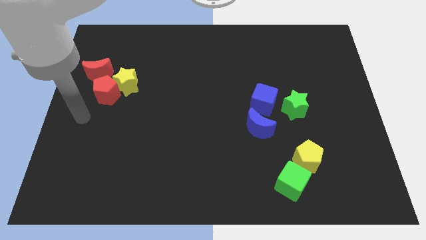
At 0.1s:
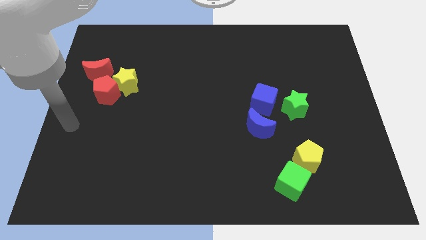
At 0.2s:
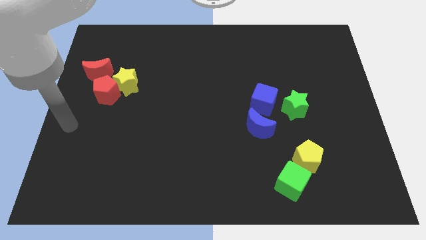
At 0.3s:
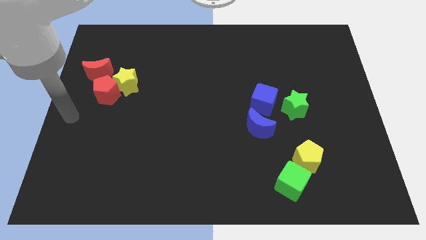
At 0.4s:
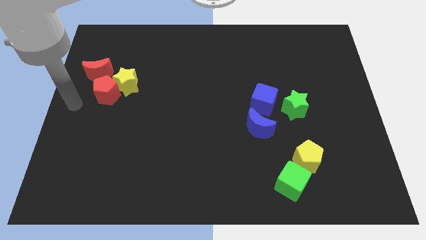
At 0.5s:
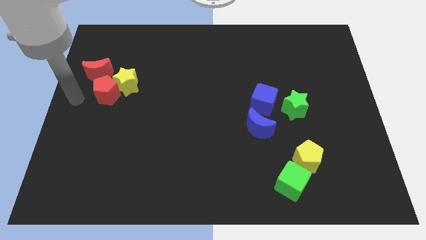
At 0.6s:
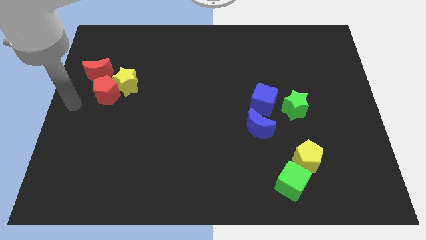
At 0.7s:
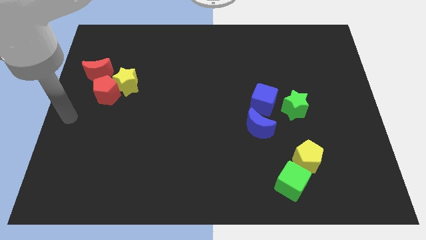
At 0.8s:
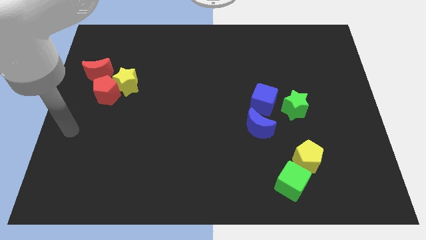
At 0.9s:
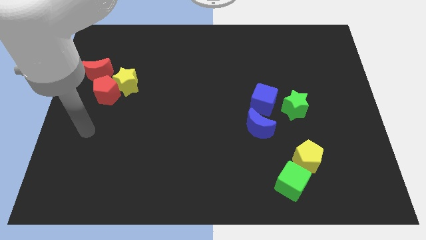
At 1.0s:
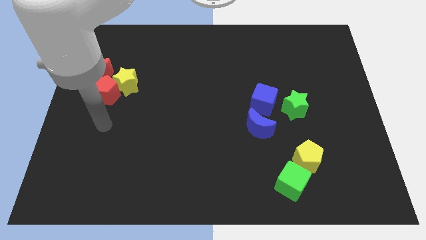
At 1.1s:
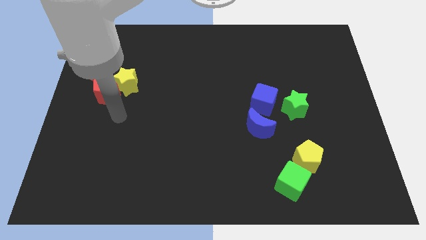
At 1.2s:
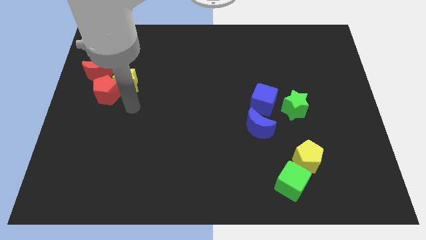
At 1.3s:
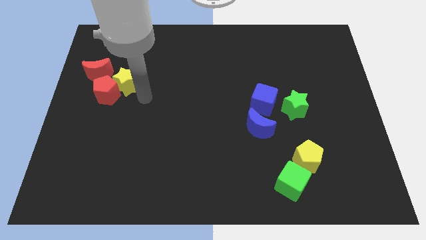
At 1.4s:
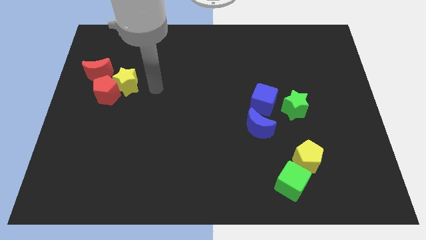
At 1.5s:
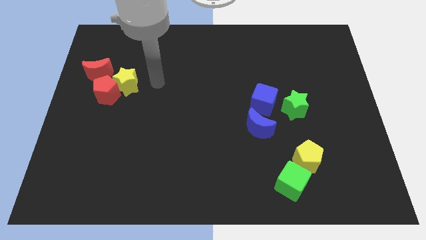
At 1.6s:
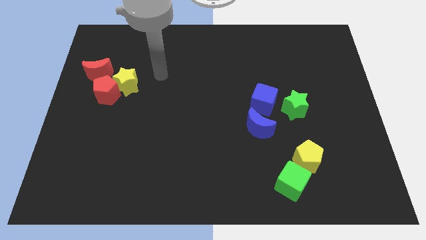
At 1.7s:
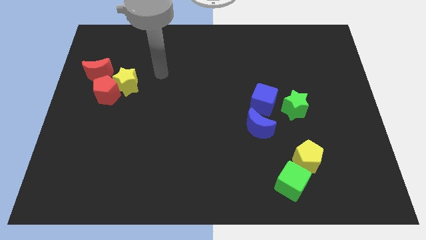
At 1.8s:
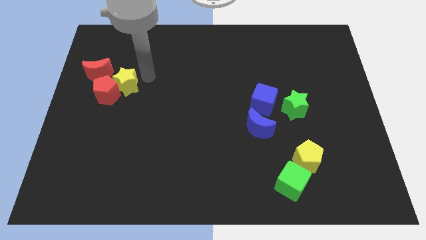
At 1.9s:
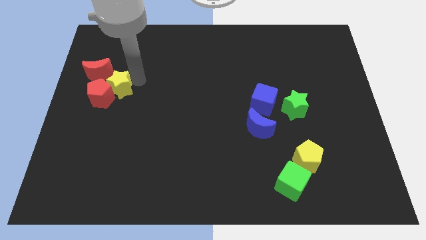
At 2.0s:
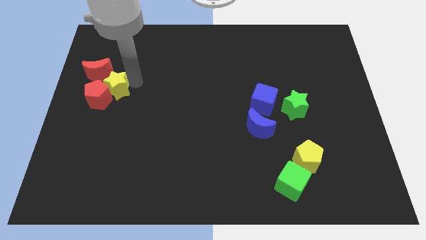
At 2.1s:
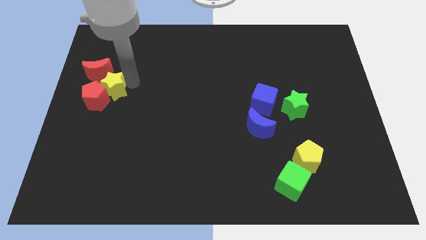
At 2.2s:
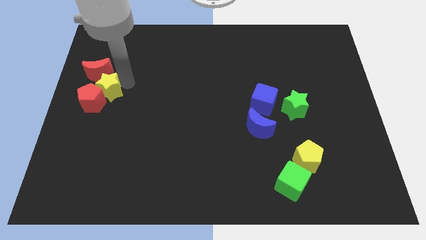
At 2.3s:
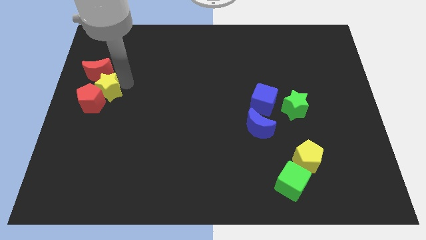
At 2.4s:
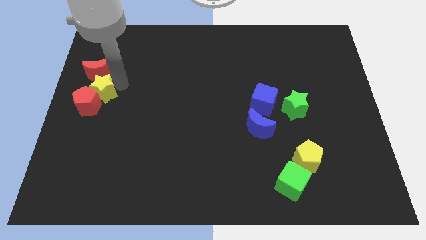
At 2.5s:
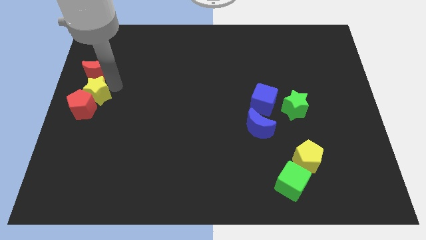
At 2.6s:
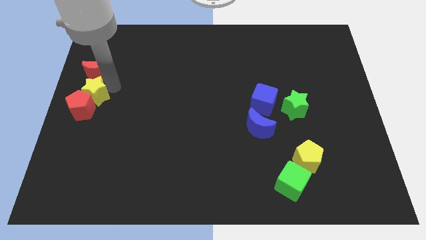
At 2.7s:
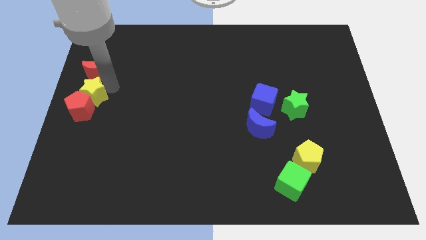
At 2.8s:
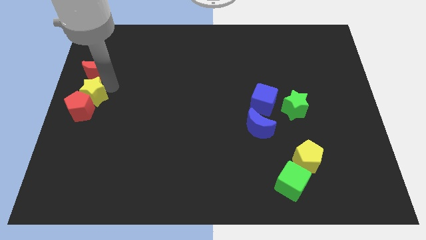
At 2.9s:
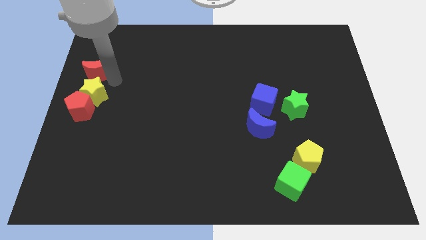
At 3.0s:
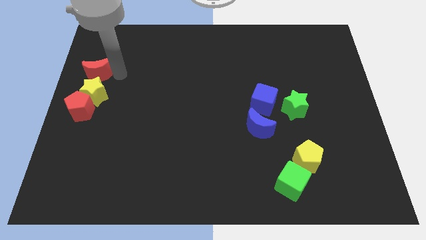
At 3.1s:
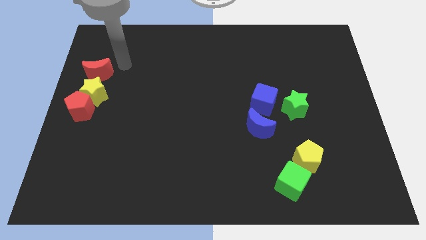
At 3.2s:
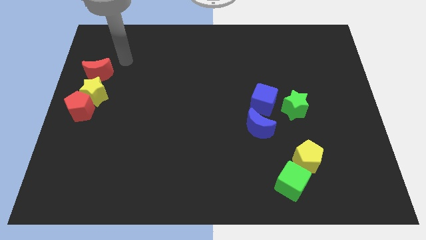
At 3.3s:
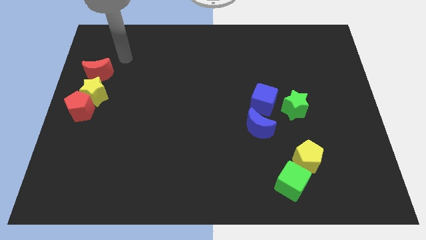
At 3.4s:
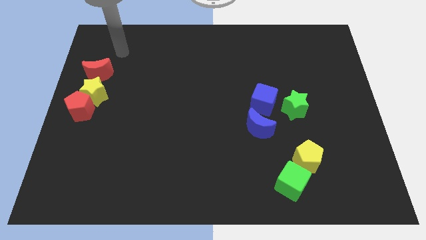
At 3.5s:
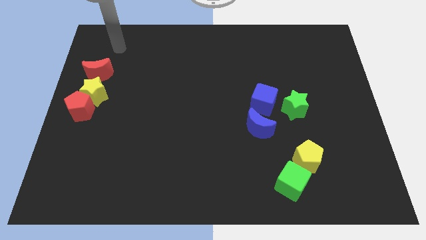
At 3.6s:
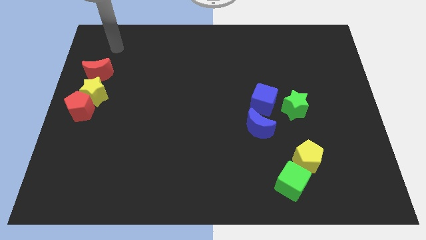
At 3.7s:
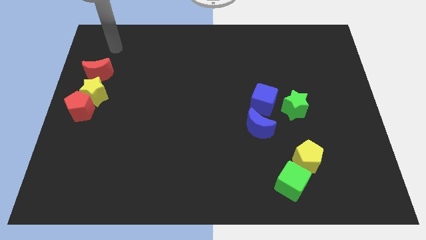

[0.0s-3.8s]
move the yellow star and the red pentagon to the bottom of the red crescent

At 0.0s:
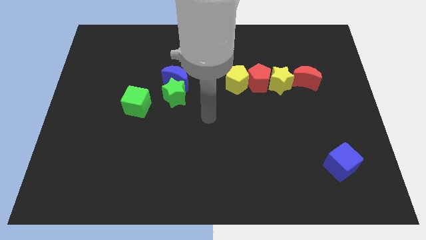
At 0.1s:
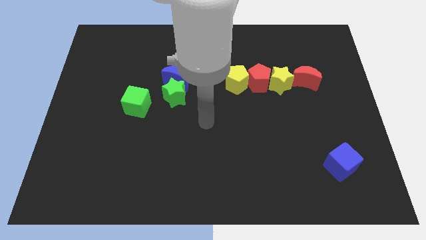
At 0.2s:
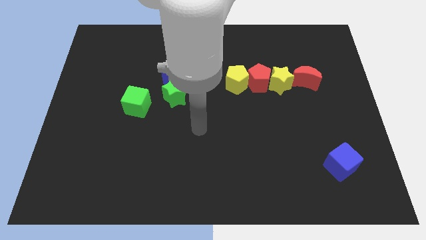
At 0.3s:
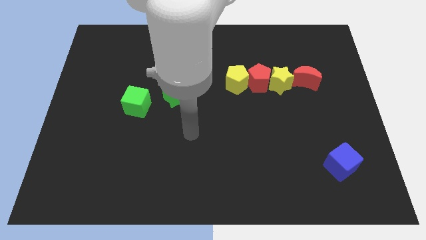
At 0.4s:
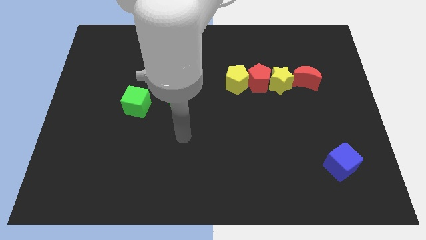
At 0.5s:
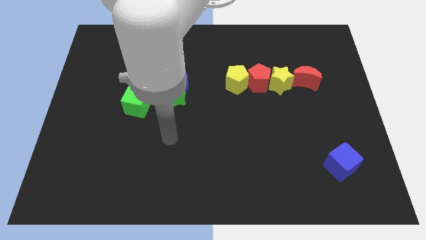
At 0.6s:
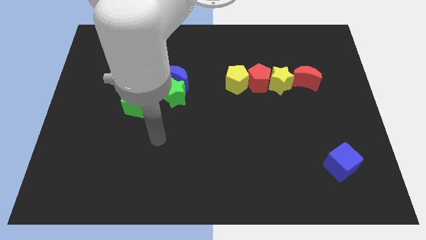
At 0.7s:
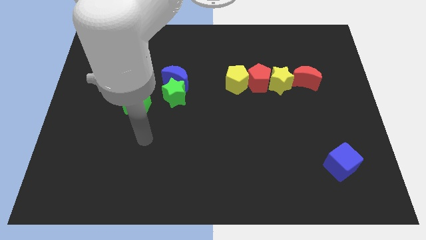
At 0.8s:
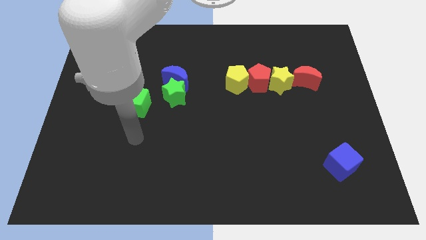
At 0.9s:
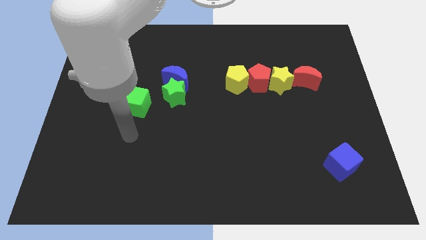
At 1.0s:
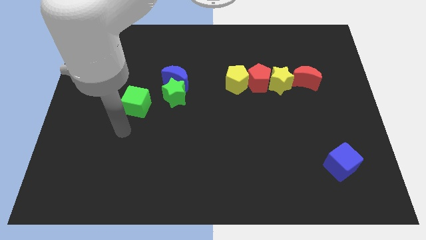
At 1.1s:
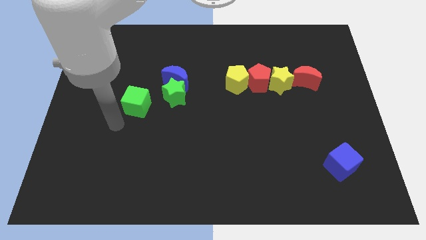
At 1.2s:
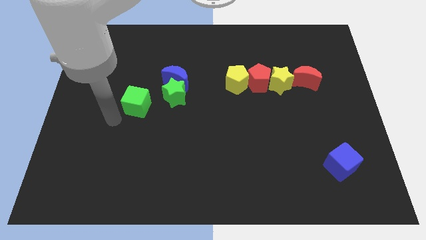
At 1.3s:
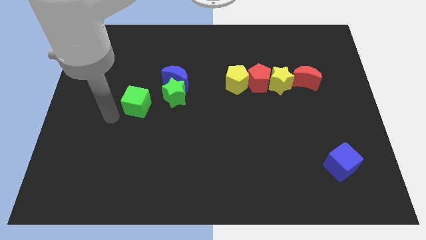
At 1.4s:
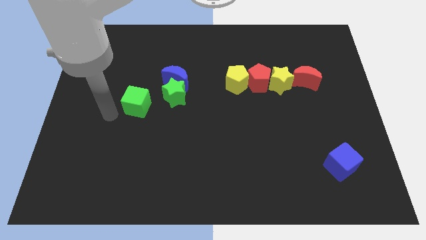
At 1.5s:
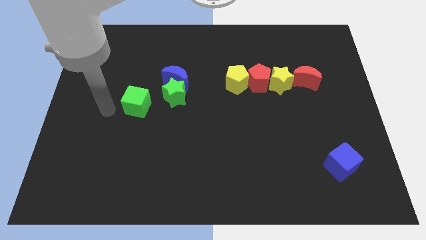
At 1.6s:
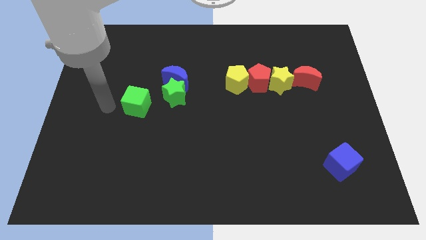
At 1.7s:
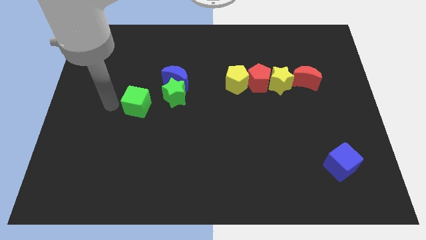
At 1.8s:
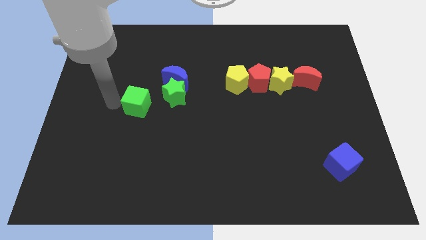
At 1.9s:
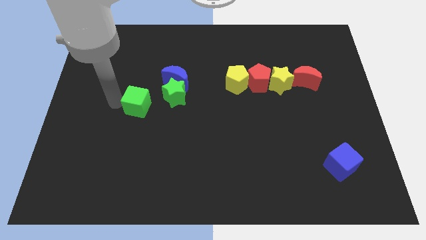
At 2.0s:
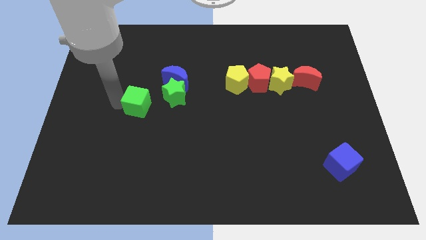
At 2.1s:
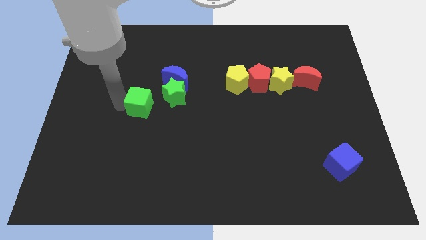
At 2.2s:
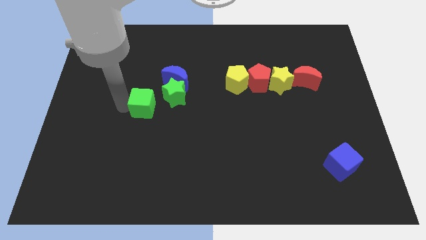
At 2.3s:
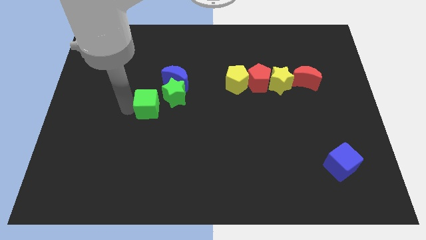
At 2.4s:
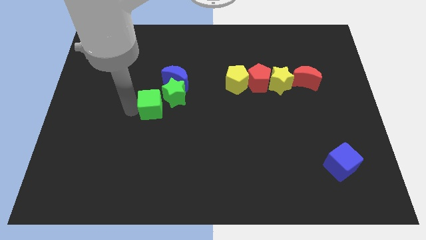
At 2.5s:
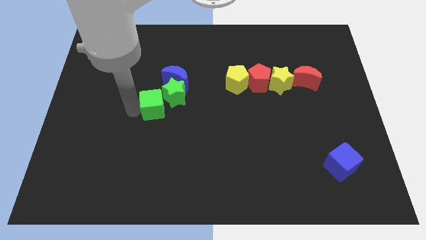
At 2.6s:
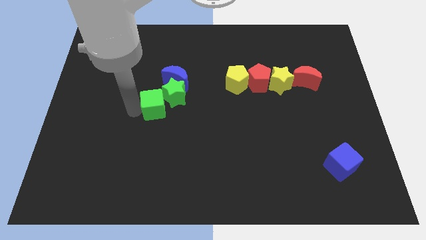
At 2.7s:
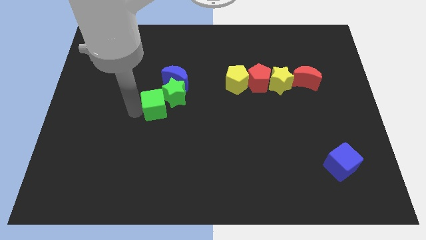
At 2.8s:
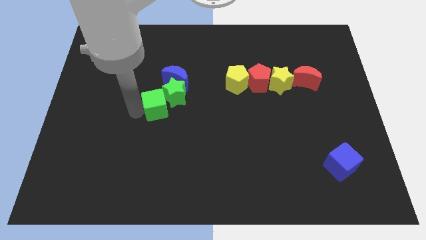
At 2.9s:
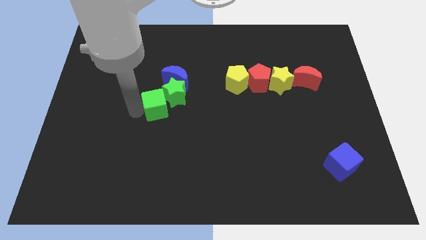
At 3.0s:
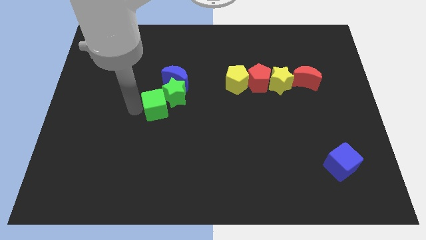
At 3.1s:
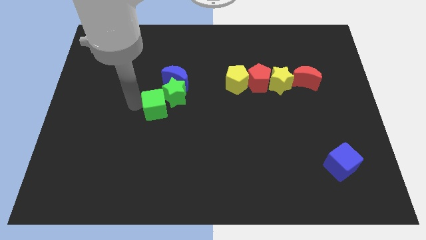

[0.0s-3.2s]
move green cube close to the green star

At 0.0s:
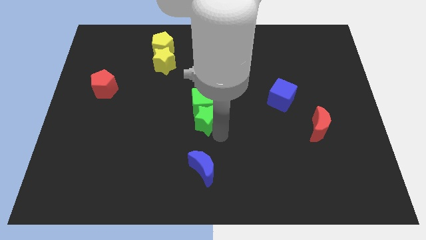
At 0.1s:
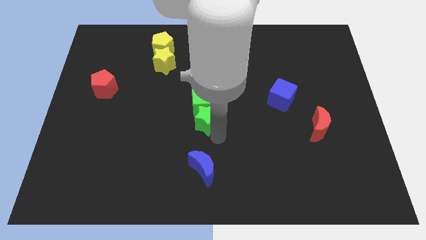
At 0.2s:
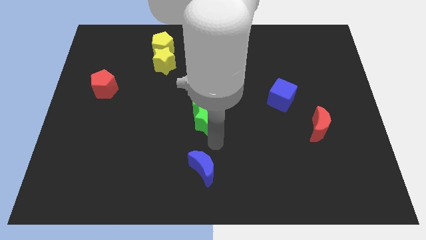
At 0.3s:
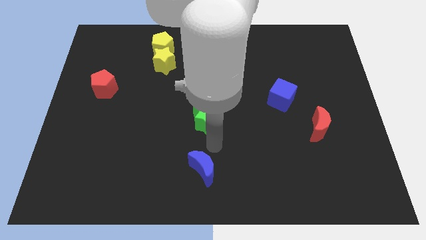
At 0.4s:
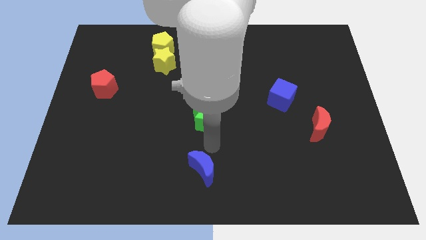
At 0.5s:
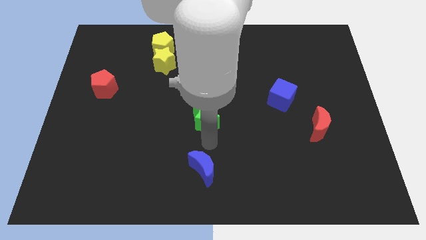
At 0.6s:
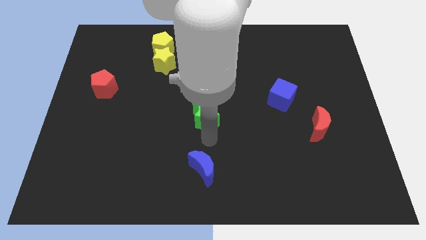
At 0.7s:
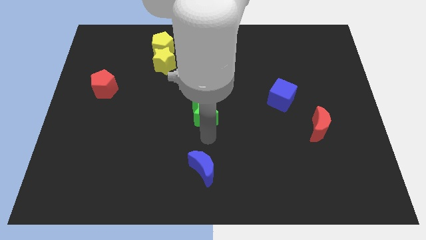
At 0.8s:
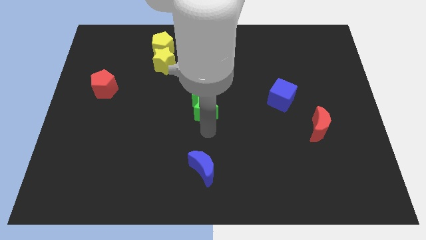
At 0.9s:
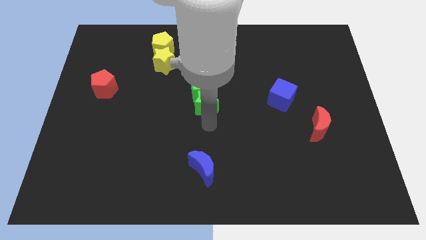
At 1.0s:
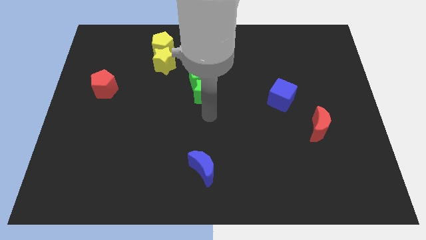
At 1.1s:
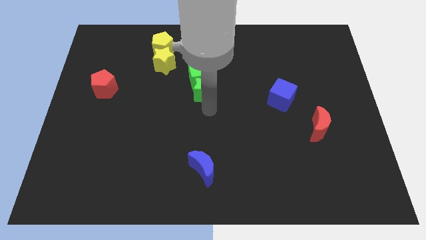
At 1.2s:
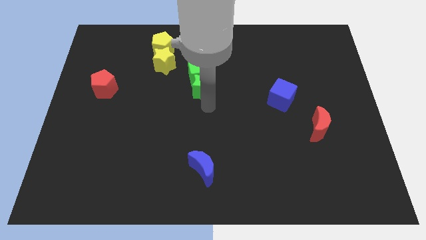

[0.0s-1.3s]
place the green blocks to the right side of the red pentagon

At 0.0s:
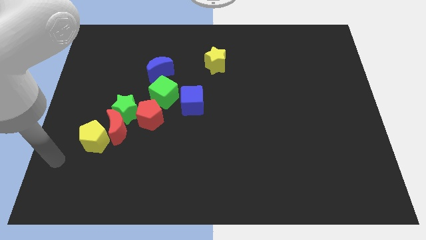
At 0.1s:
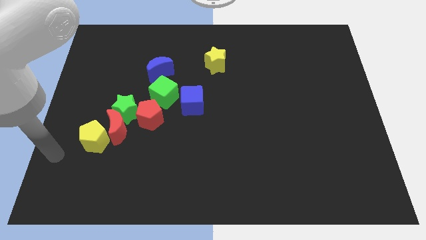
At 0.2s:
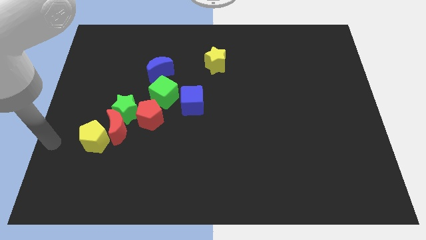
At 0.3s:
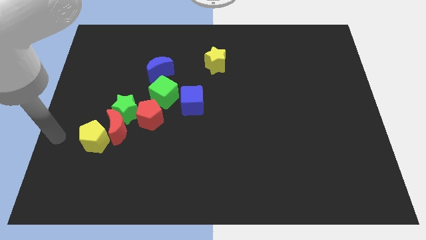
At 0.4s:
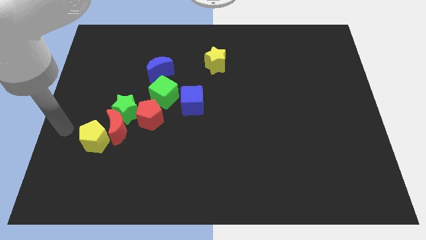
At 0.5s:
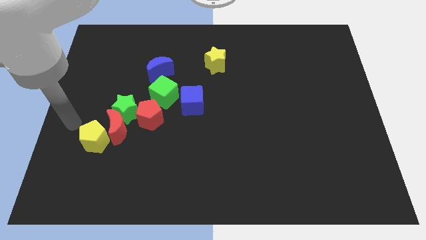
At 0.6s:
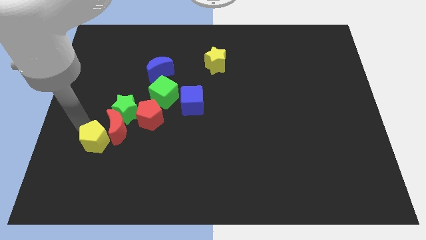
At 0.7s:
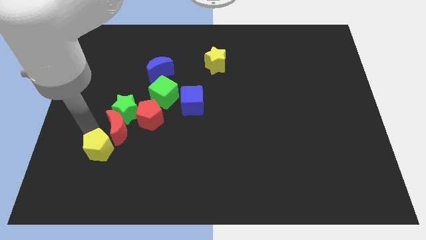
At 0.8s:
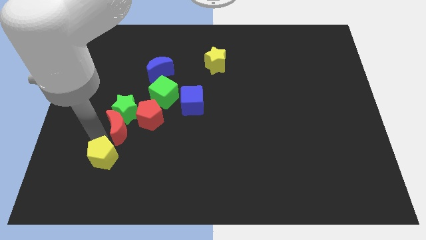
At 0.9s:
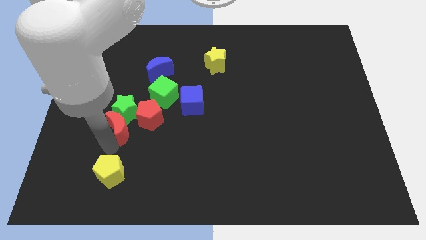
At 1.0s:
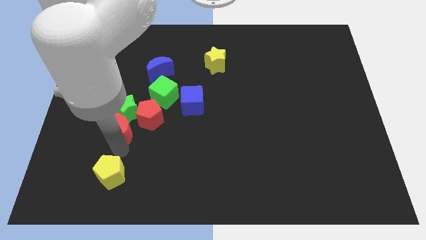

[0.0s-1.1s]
separate yellow pentagon from red moon
